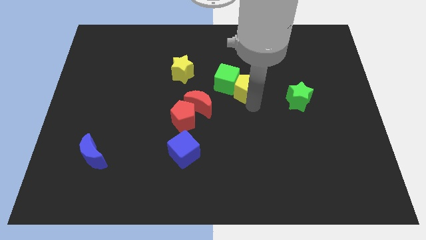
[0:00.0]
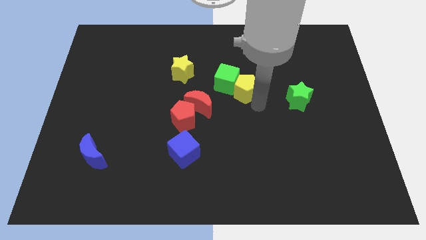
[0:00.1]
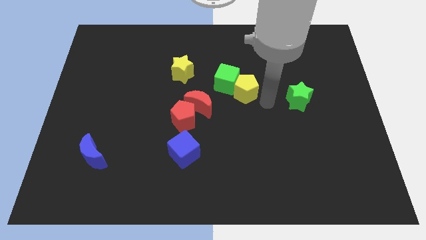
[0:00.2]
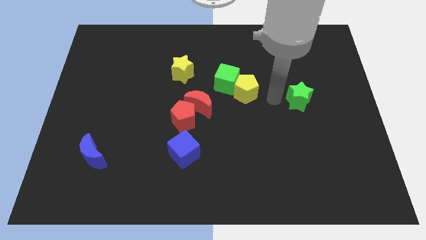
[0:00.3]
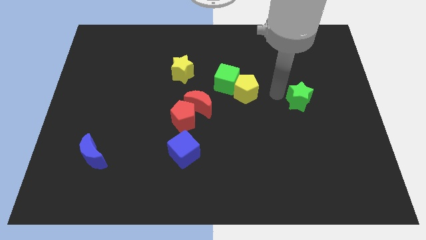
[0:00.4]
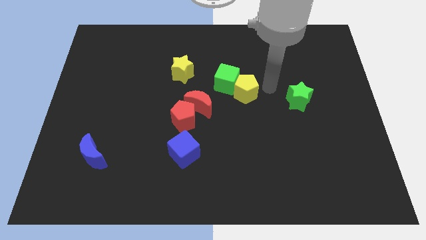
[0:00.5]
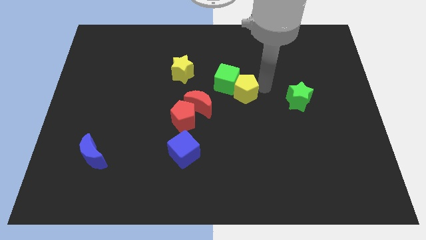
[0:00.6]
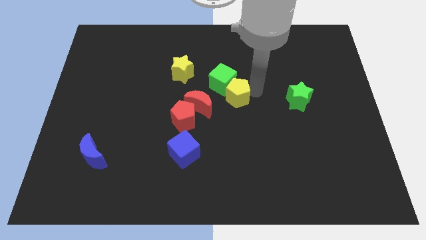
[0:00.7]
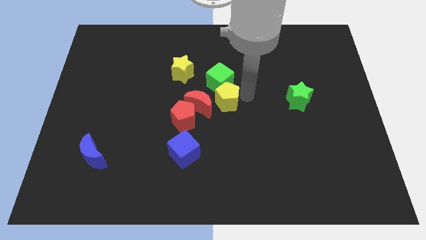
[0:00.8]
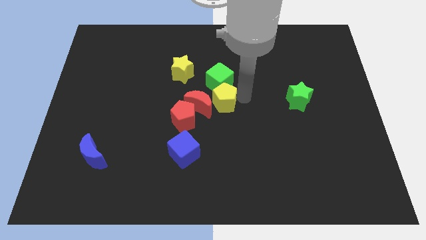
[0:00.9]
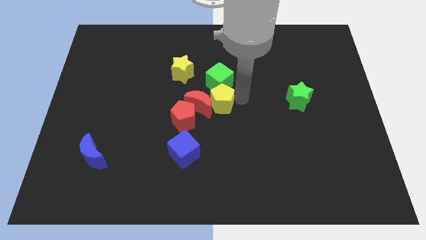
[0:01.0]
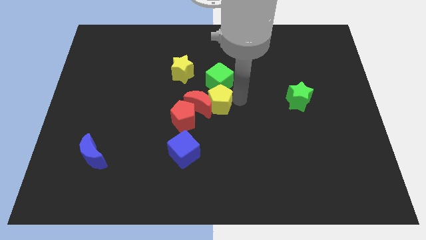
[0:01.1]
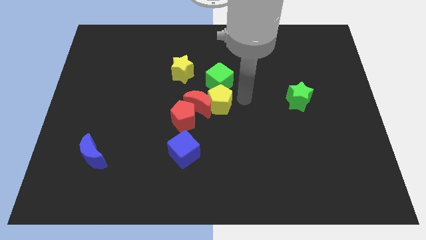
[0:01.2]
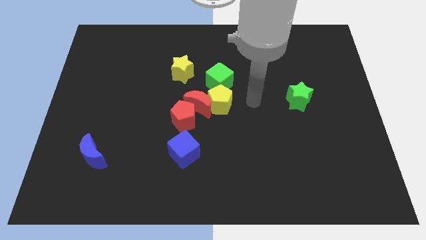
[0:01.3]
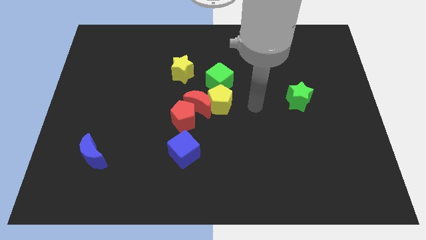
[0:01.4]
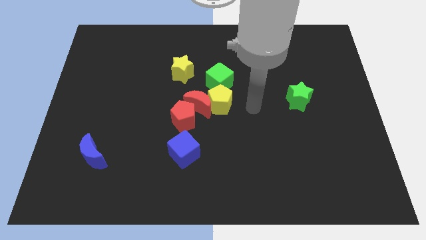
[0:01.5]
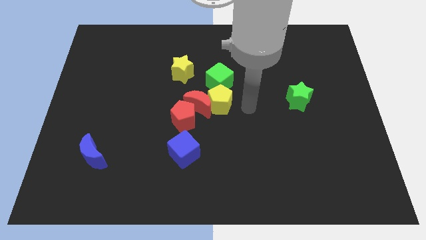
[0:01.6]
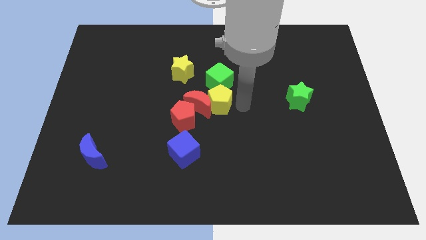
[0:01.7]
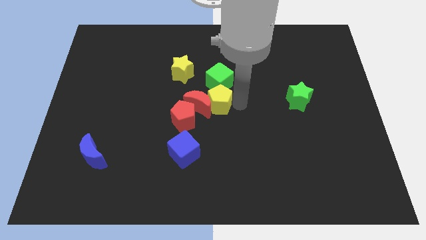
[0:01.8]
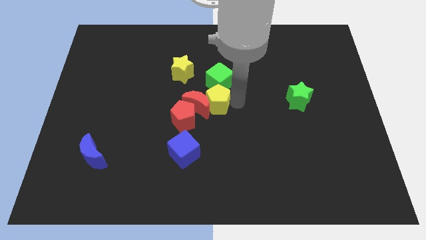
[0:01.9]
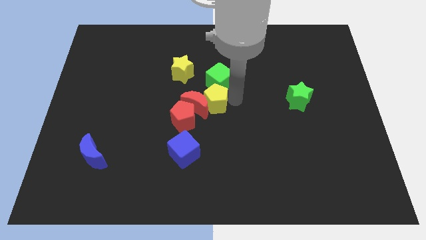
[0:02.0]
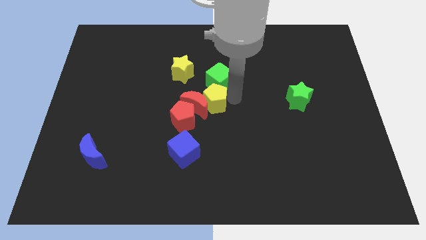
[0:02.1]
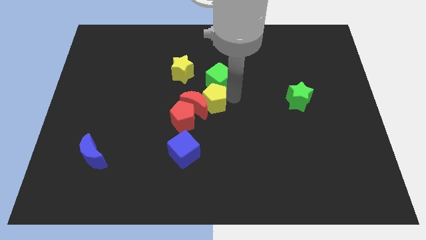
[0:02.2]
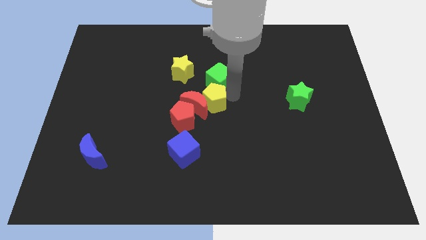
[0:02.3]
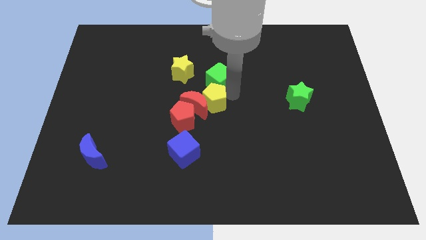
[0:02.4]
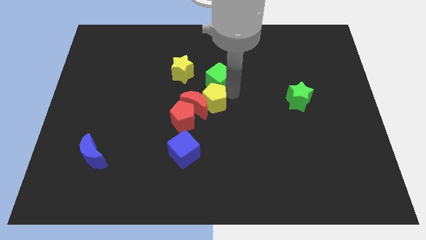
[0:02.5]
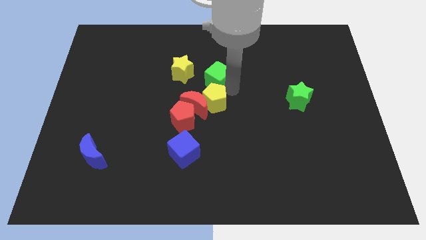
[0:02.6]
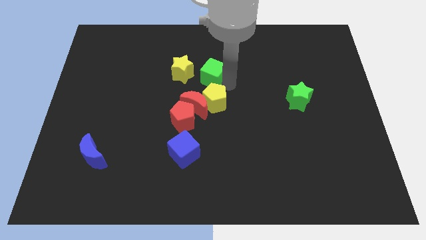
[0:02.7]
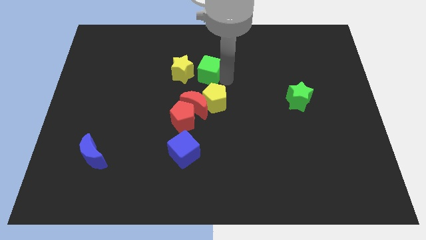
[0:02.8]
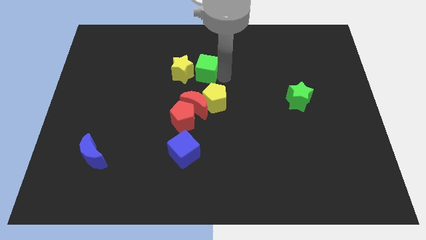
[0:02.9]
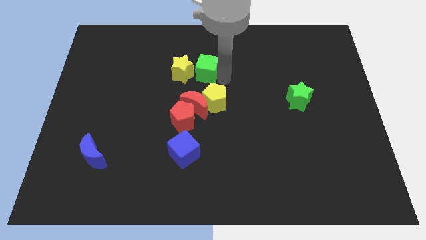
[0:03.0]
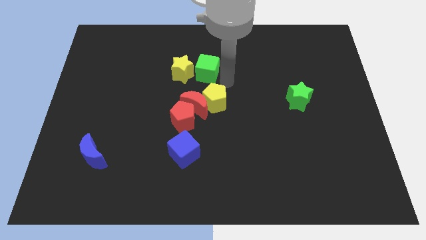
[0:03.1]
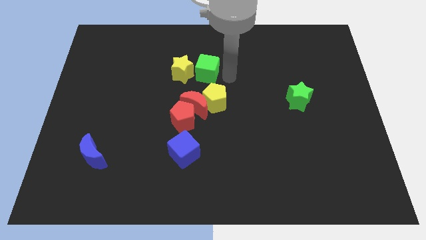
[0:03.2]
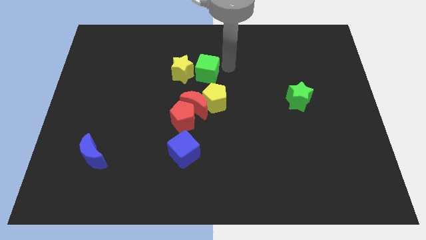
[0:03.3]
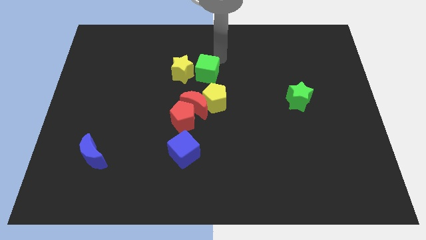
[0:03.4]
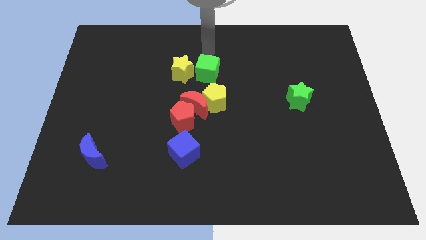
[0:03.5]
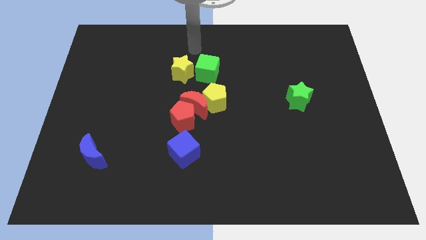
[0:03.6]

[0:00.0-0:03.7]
move green cube to the right of the yellow star

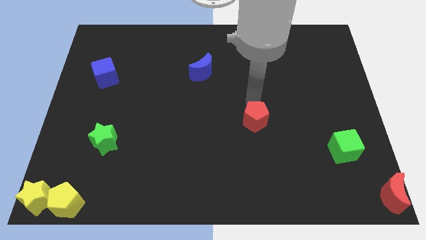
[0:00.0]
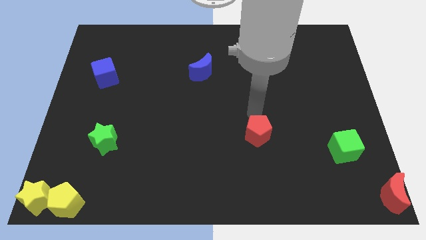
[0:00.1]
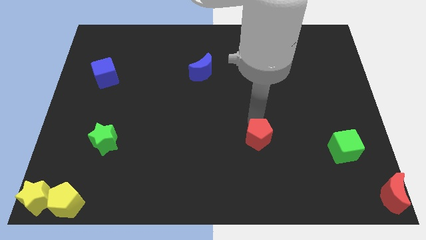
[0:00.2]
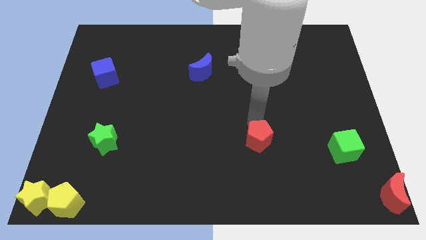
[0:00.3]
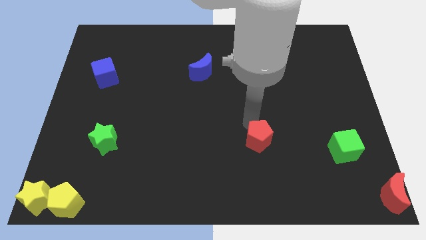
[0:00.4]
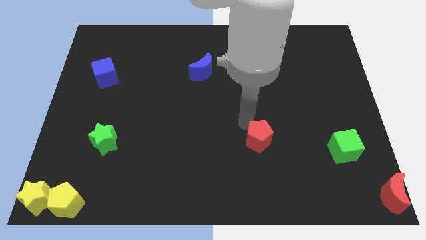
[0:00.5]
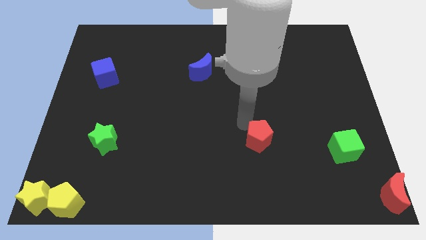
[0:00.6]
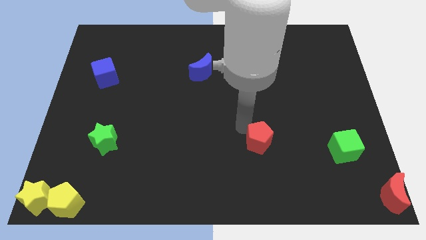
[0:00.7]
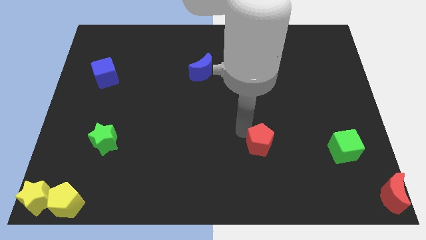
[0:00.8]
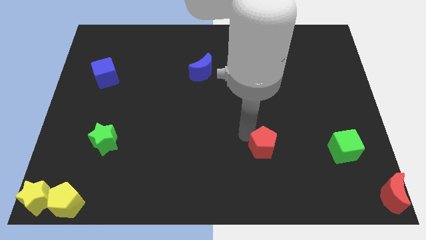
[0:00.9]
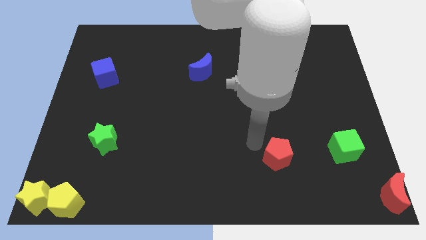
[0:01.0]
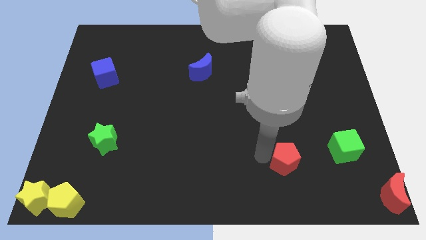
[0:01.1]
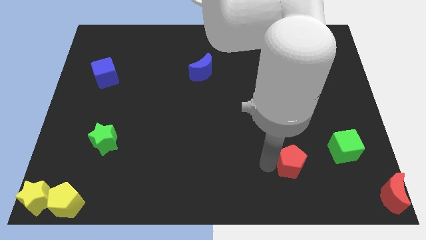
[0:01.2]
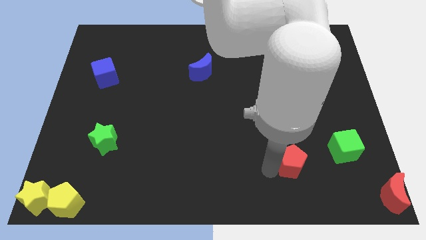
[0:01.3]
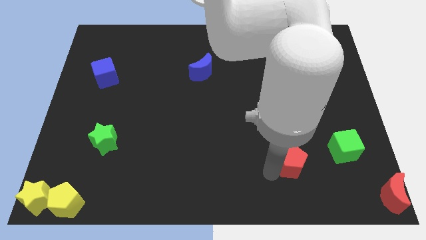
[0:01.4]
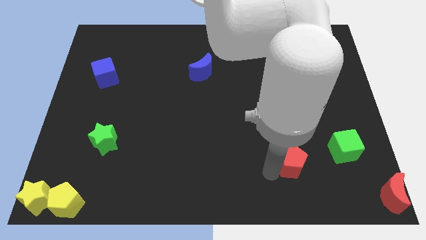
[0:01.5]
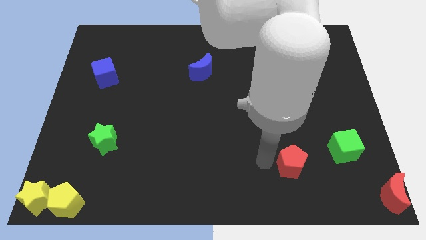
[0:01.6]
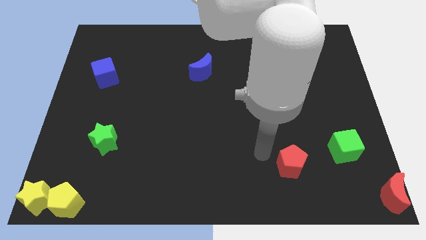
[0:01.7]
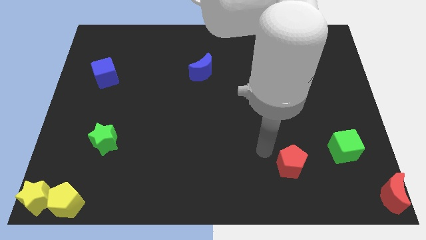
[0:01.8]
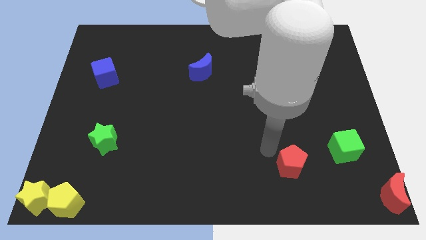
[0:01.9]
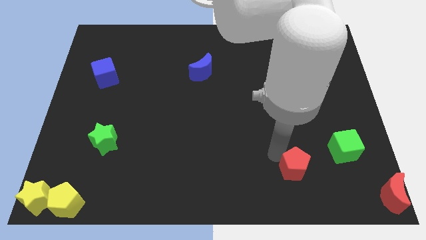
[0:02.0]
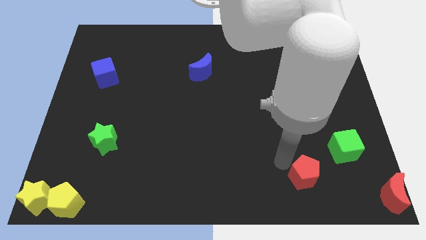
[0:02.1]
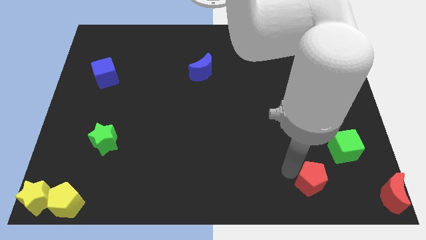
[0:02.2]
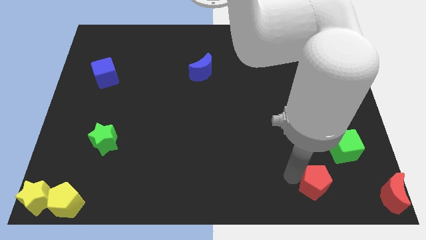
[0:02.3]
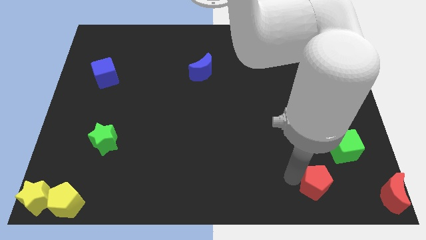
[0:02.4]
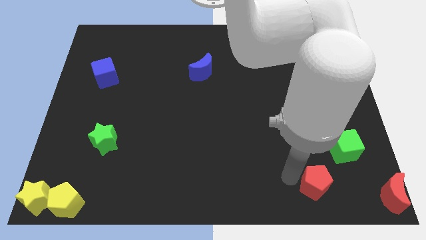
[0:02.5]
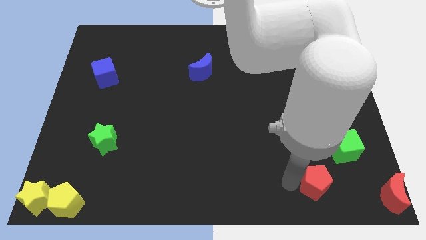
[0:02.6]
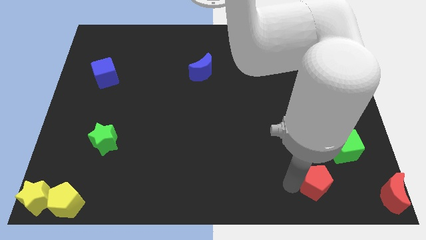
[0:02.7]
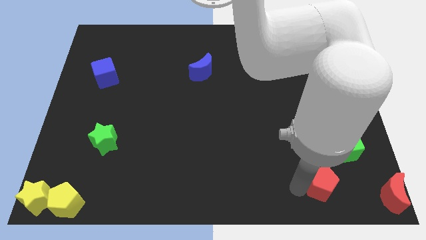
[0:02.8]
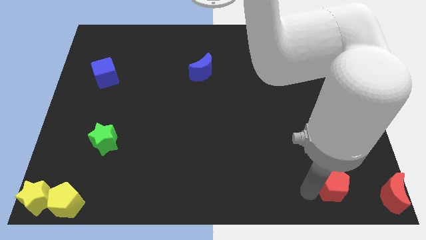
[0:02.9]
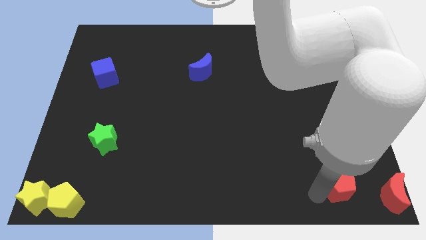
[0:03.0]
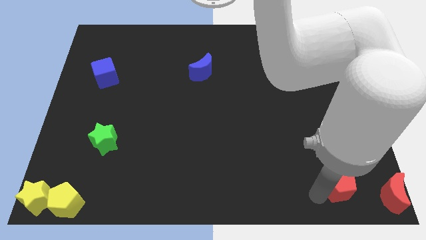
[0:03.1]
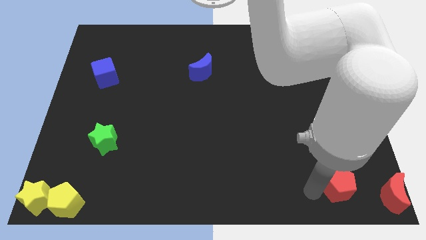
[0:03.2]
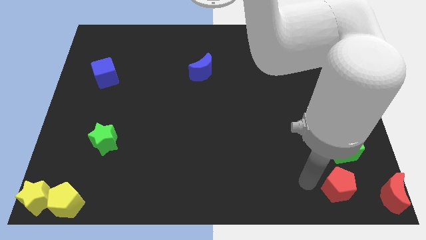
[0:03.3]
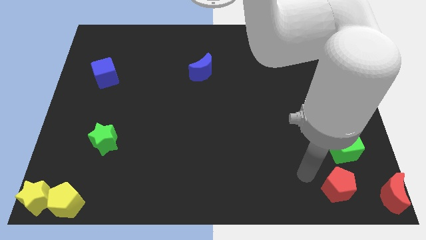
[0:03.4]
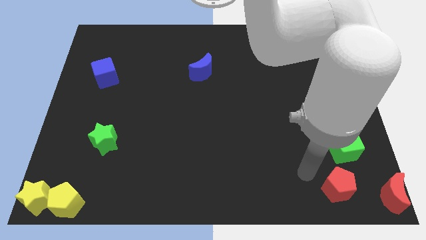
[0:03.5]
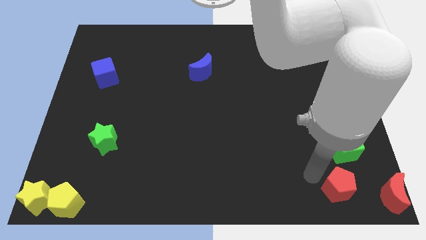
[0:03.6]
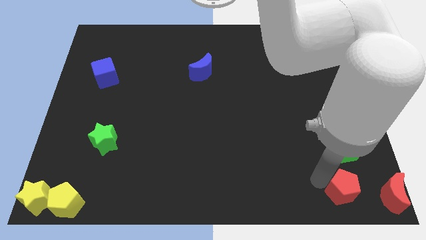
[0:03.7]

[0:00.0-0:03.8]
move the red pentagon to the bottom of green cube

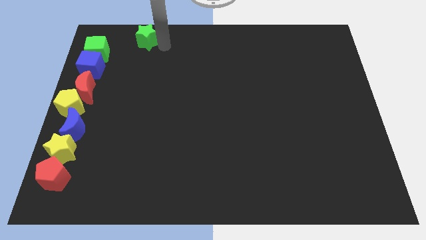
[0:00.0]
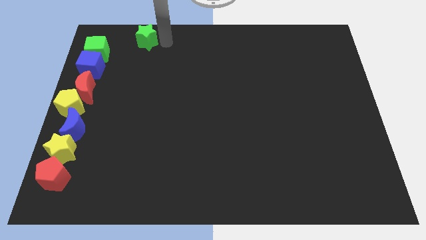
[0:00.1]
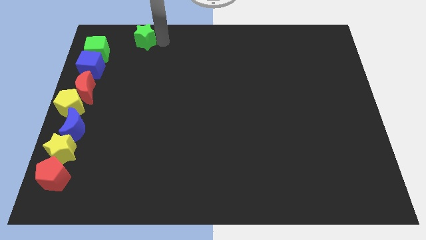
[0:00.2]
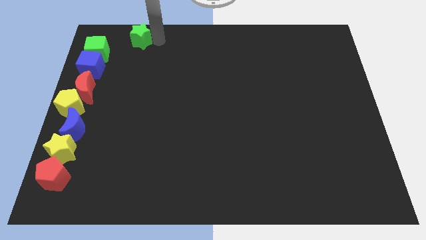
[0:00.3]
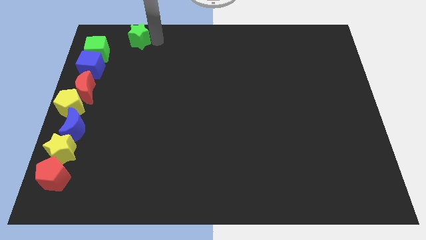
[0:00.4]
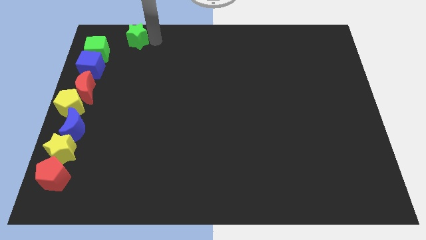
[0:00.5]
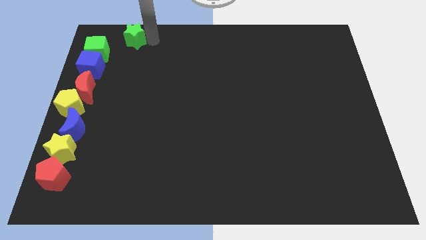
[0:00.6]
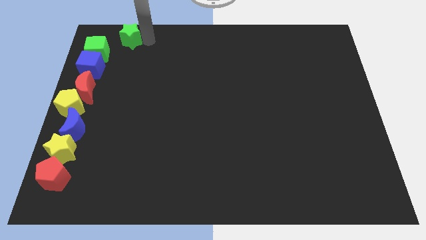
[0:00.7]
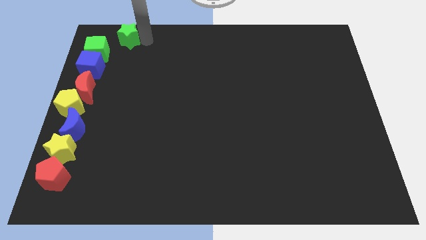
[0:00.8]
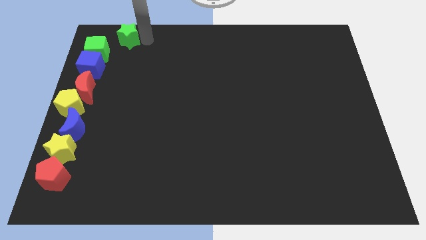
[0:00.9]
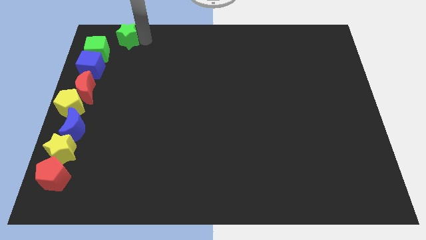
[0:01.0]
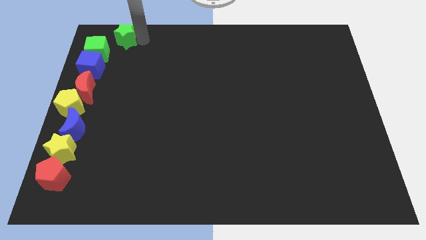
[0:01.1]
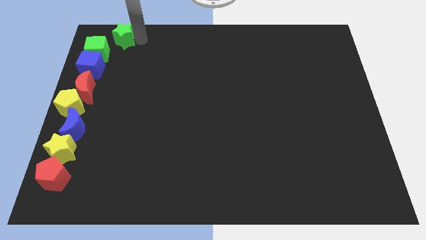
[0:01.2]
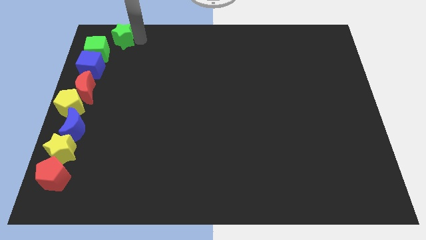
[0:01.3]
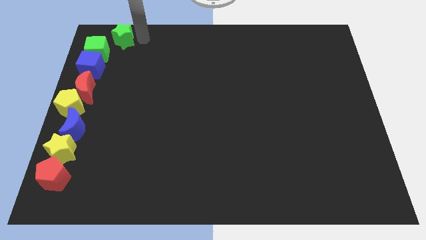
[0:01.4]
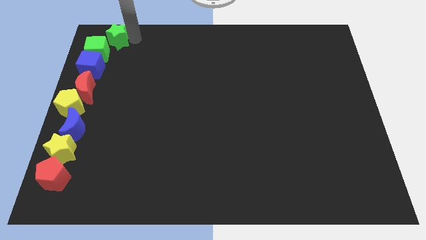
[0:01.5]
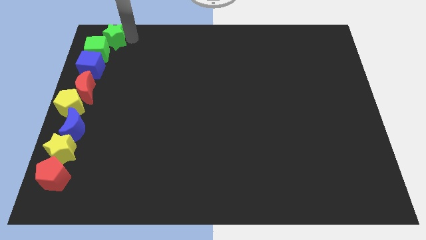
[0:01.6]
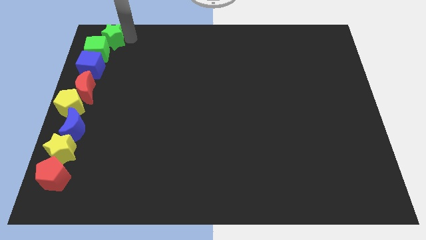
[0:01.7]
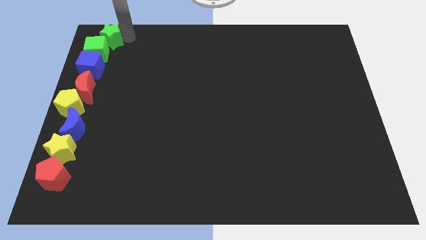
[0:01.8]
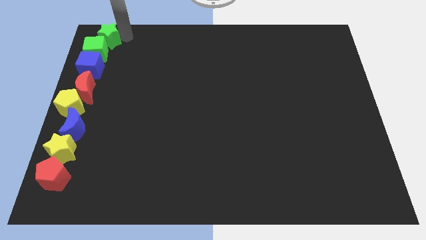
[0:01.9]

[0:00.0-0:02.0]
move the green star to the top right of the green cube
